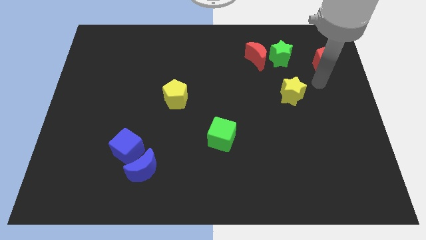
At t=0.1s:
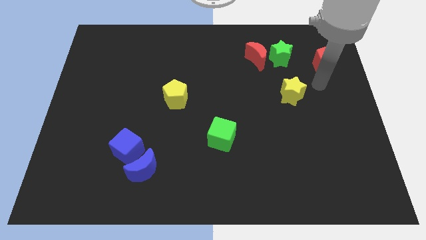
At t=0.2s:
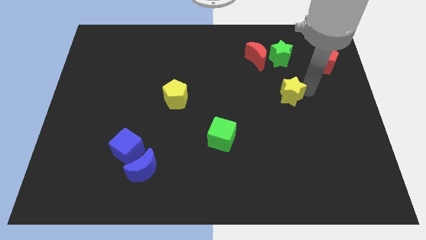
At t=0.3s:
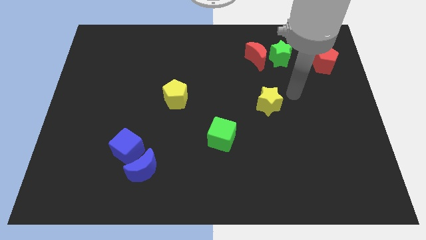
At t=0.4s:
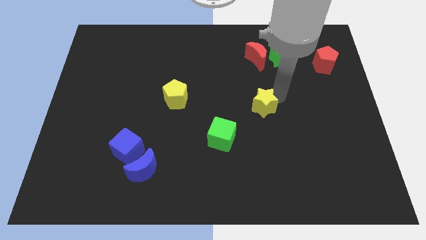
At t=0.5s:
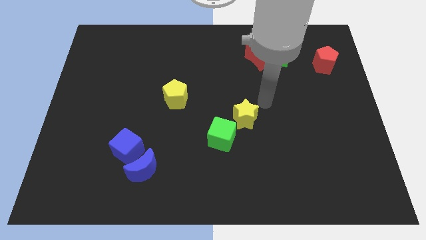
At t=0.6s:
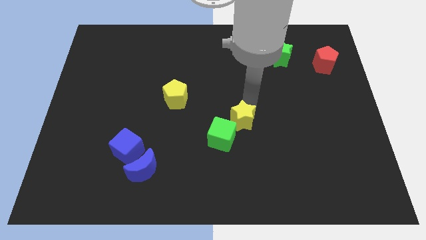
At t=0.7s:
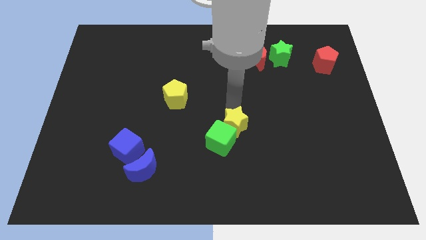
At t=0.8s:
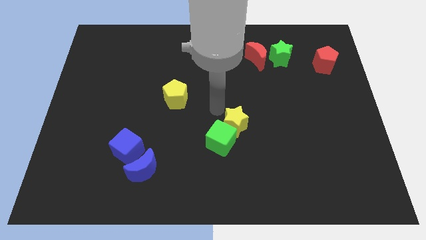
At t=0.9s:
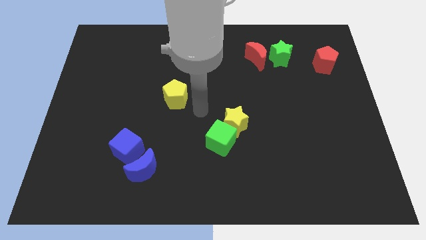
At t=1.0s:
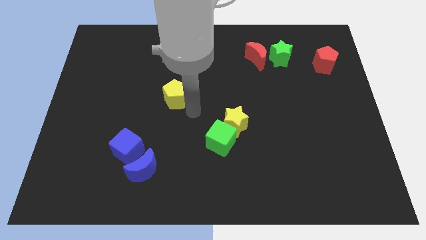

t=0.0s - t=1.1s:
push the yellow star towards the green cube at the center of the board

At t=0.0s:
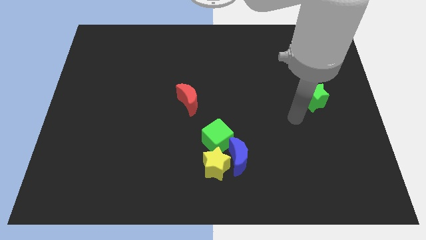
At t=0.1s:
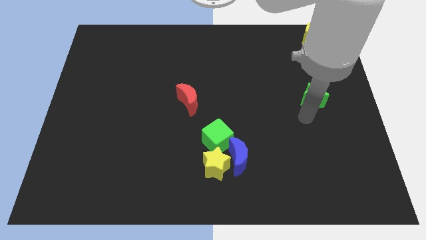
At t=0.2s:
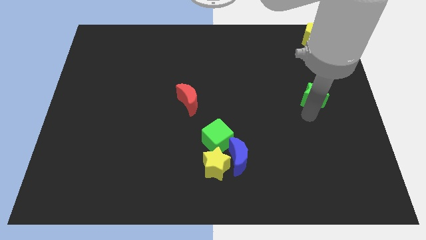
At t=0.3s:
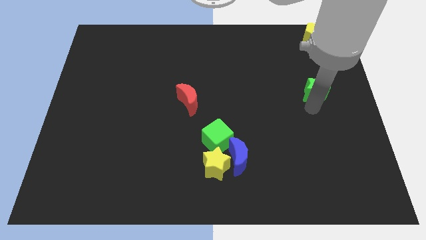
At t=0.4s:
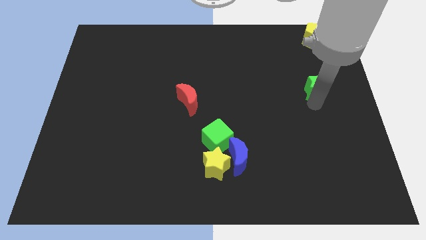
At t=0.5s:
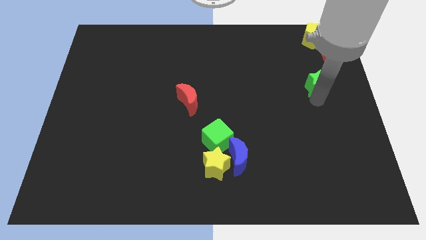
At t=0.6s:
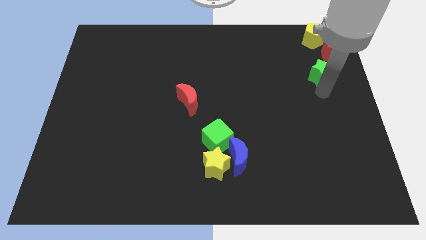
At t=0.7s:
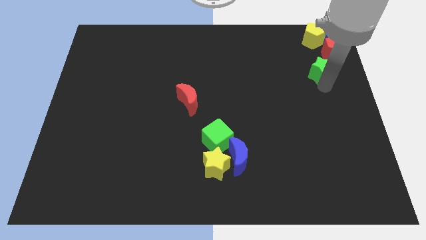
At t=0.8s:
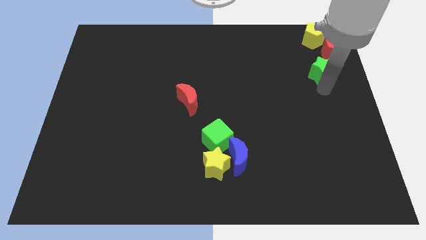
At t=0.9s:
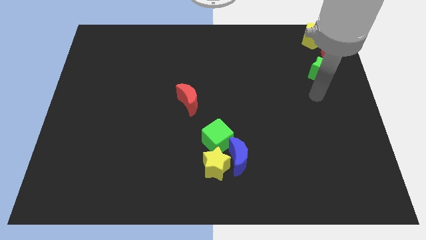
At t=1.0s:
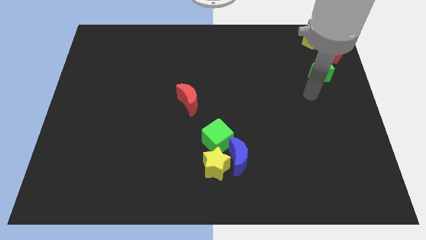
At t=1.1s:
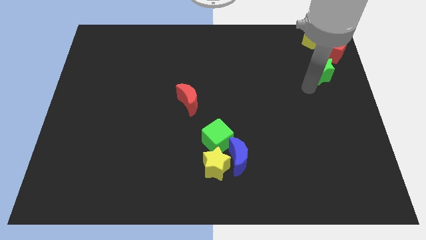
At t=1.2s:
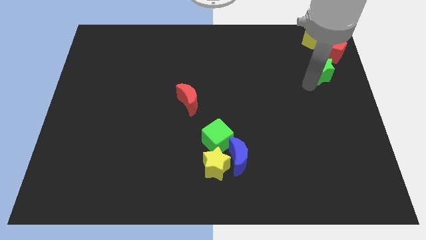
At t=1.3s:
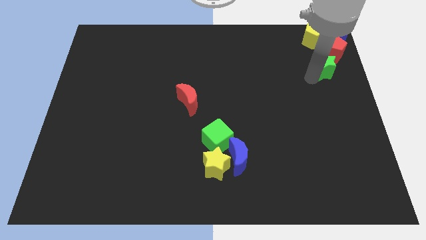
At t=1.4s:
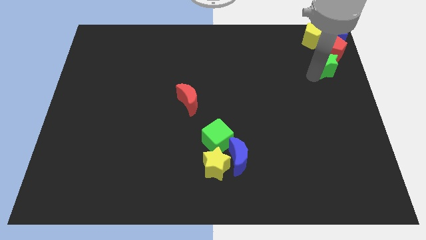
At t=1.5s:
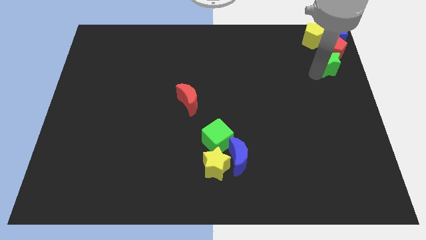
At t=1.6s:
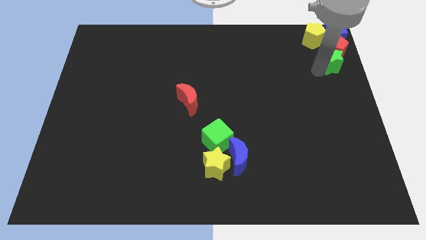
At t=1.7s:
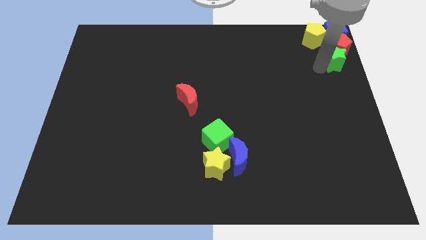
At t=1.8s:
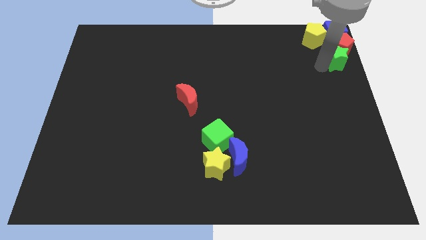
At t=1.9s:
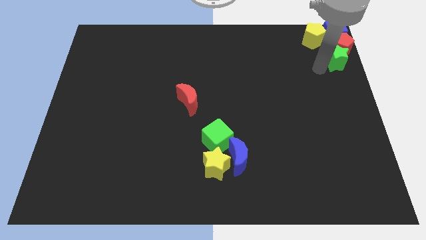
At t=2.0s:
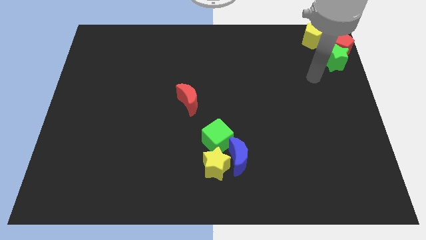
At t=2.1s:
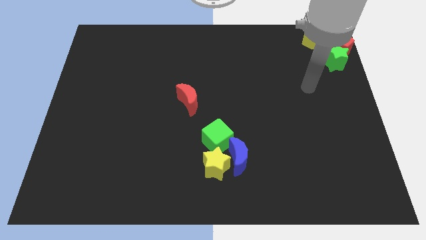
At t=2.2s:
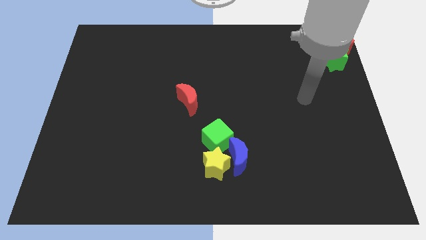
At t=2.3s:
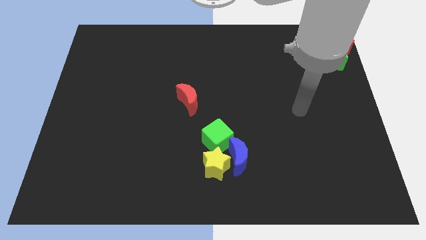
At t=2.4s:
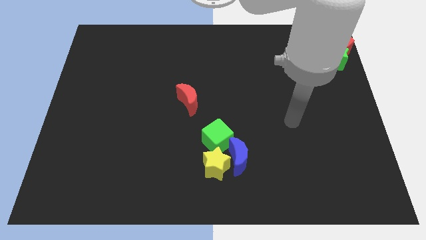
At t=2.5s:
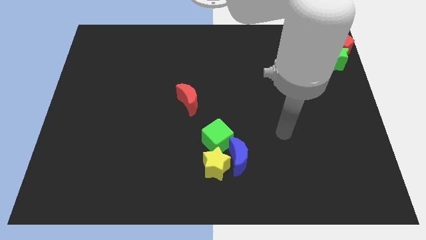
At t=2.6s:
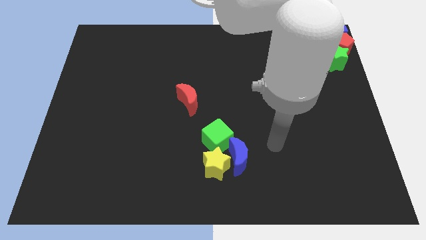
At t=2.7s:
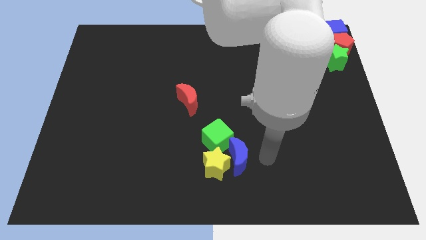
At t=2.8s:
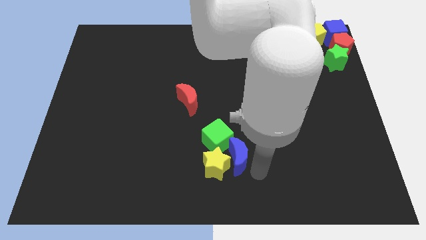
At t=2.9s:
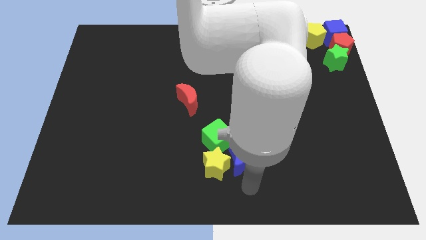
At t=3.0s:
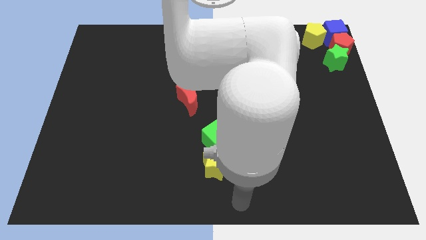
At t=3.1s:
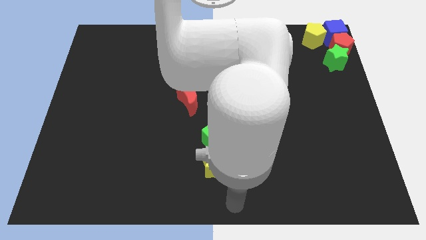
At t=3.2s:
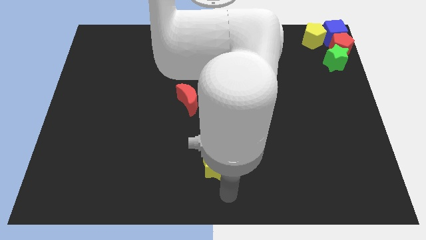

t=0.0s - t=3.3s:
place your hand at the bottom center of the board

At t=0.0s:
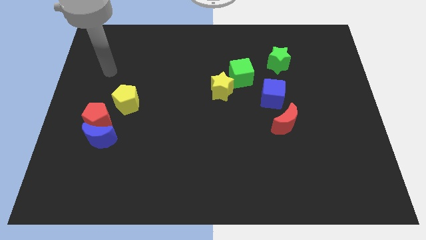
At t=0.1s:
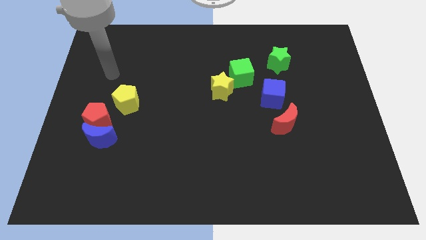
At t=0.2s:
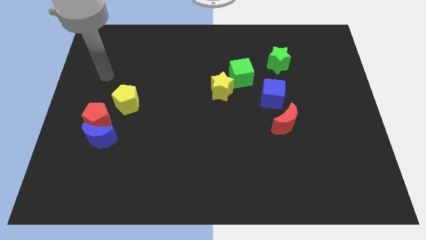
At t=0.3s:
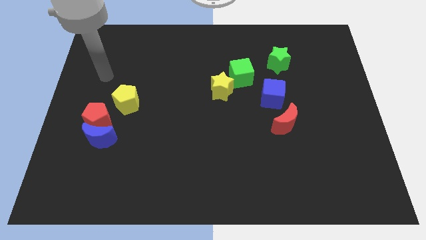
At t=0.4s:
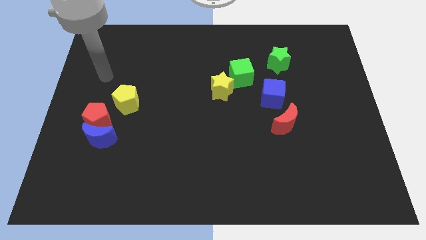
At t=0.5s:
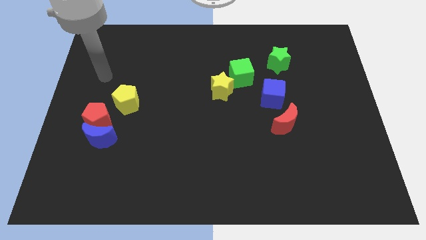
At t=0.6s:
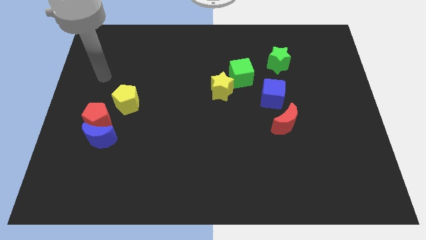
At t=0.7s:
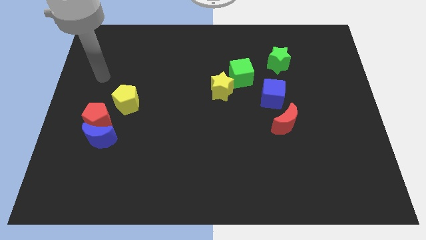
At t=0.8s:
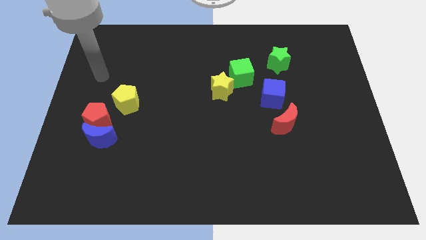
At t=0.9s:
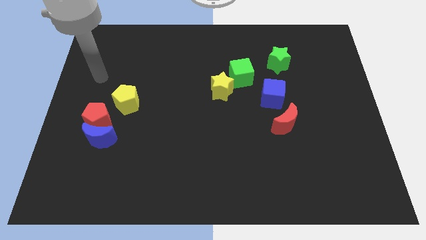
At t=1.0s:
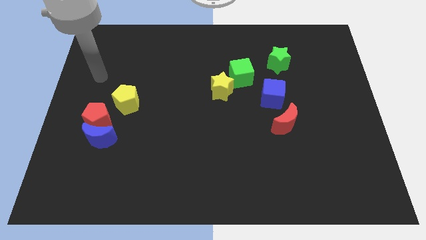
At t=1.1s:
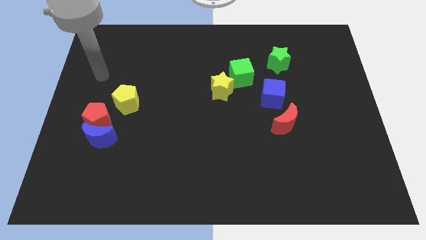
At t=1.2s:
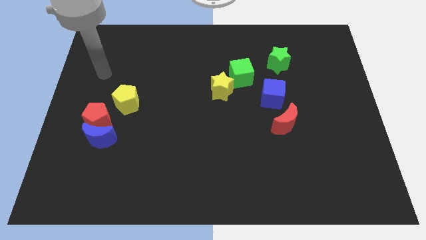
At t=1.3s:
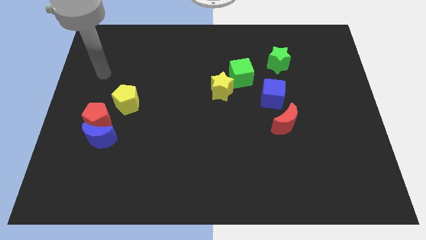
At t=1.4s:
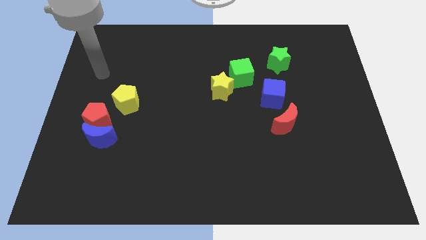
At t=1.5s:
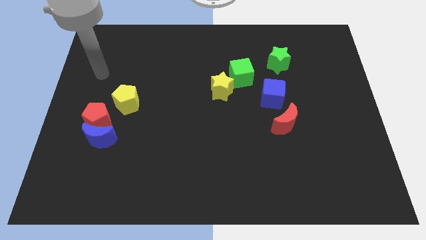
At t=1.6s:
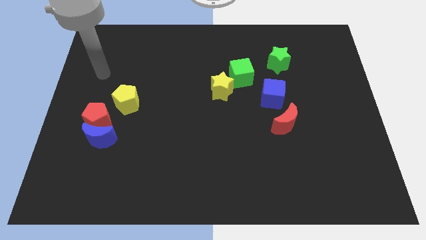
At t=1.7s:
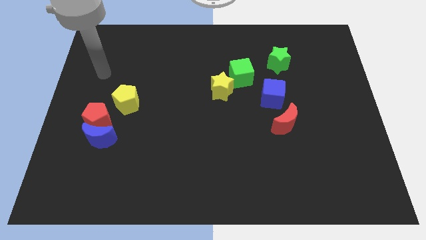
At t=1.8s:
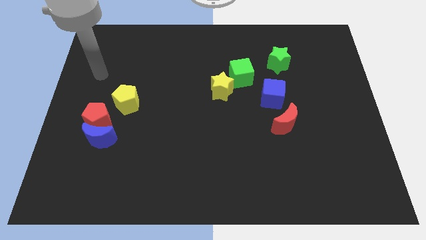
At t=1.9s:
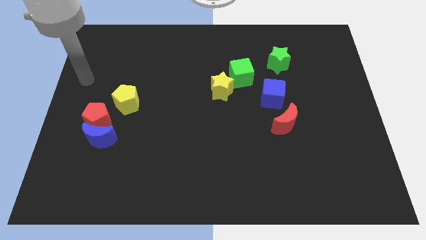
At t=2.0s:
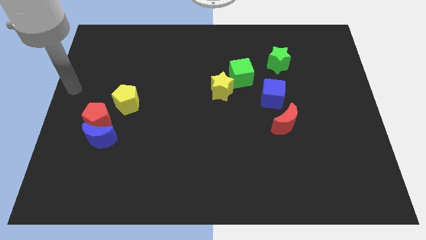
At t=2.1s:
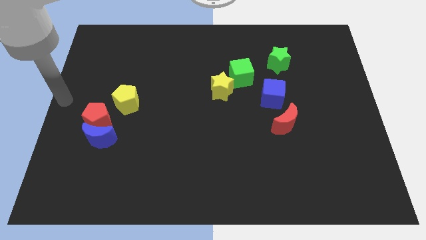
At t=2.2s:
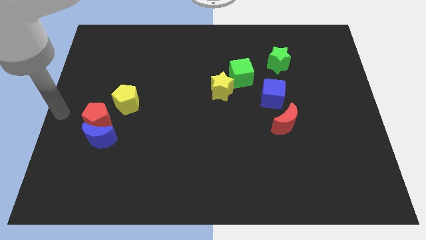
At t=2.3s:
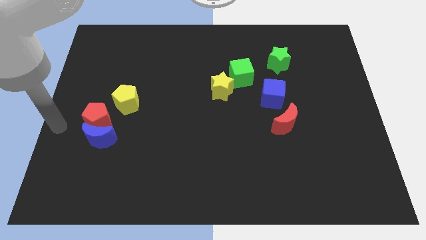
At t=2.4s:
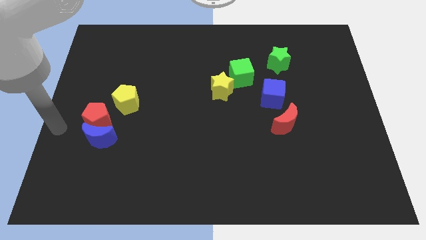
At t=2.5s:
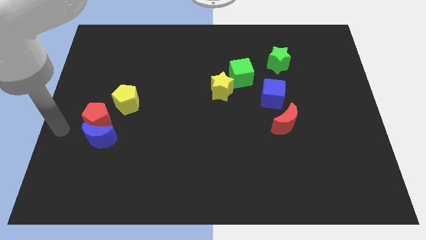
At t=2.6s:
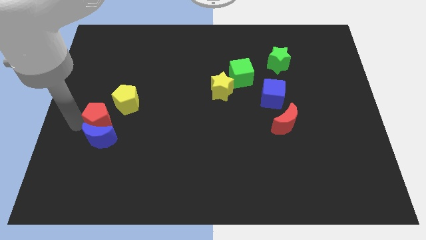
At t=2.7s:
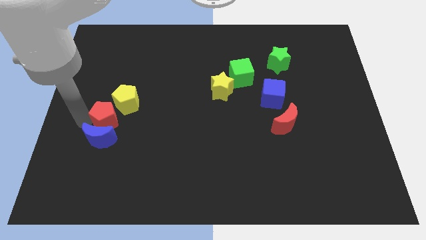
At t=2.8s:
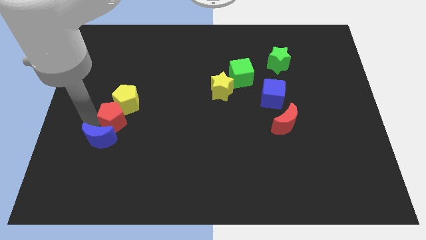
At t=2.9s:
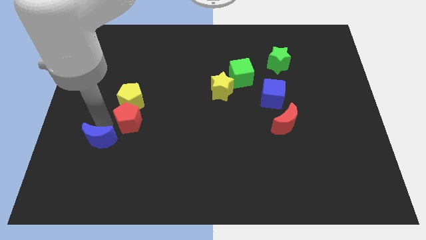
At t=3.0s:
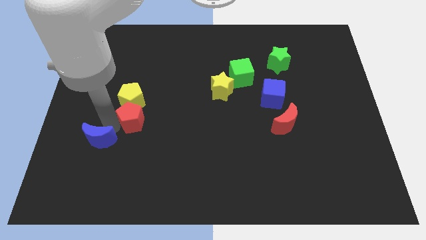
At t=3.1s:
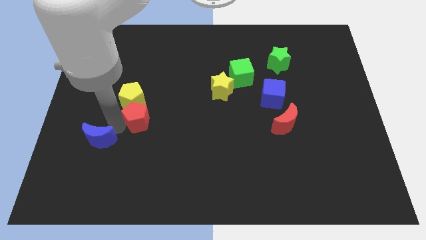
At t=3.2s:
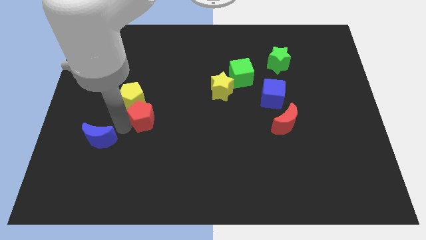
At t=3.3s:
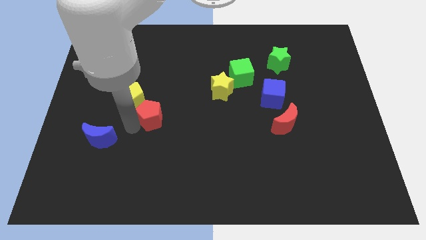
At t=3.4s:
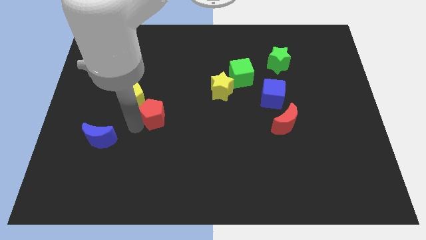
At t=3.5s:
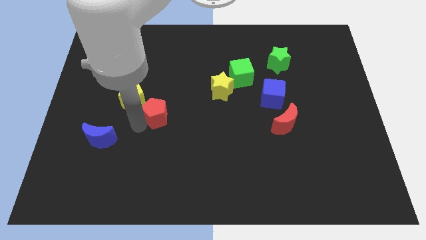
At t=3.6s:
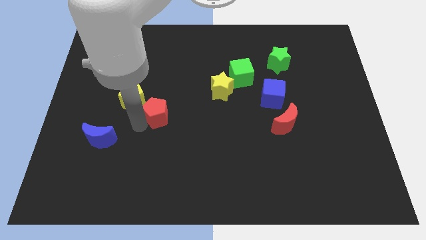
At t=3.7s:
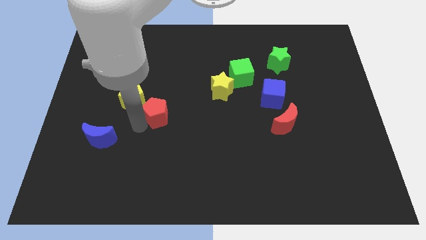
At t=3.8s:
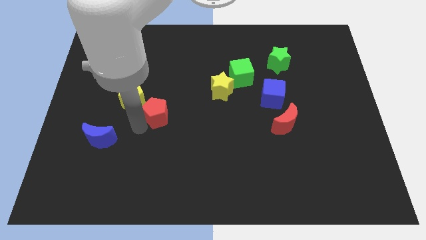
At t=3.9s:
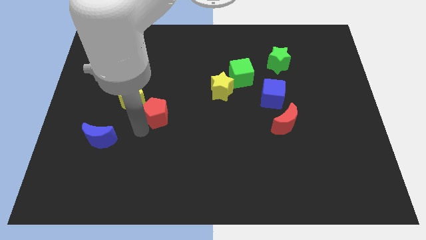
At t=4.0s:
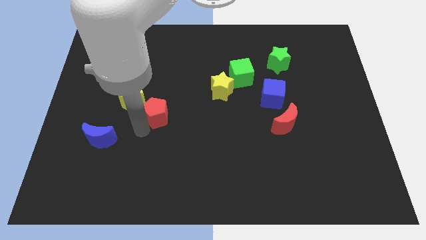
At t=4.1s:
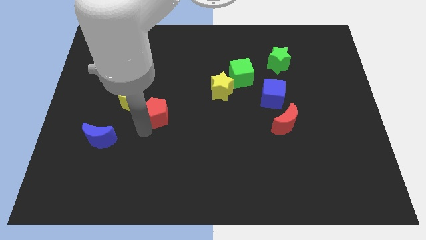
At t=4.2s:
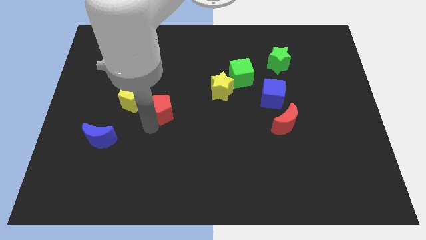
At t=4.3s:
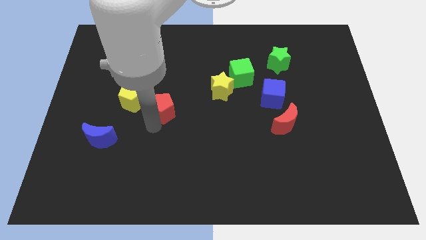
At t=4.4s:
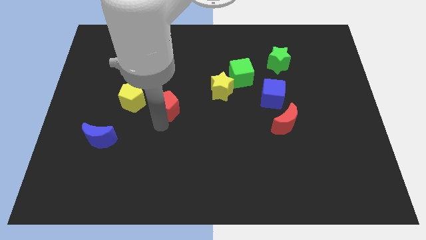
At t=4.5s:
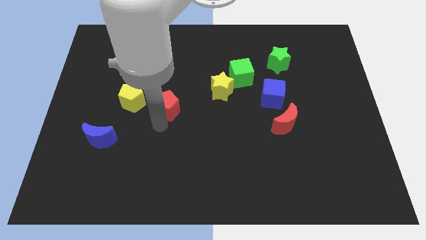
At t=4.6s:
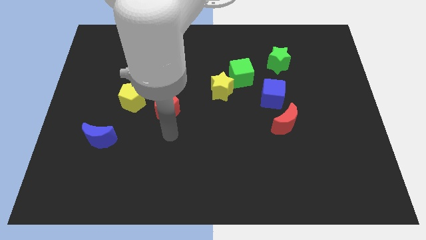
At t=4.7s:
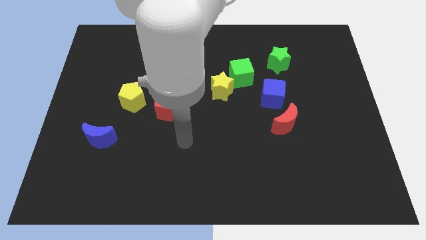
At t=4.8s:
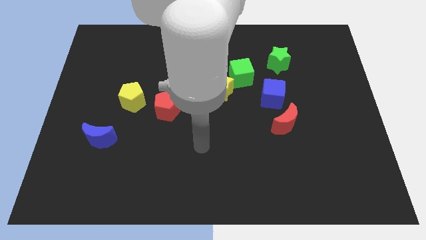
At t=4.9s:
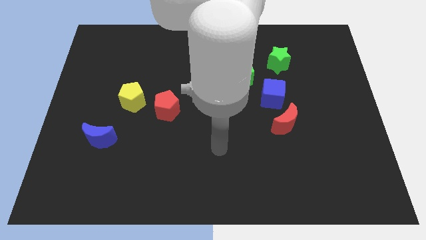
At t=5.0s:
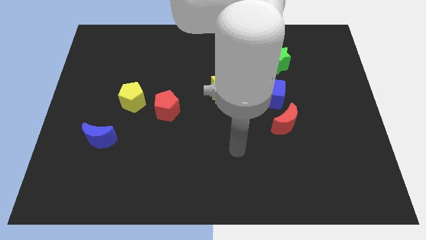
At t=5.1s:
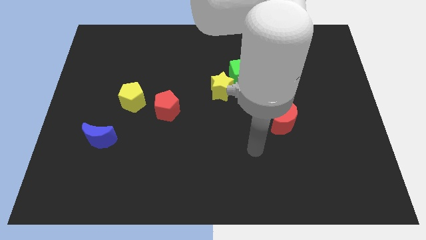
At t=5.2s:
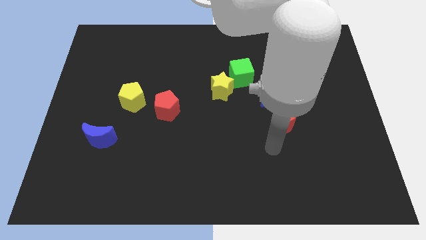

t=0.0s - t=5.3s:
move the red pentagon to the right of the yellow pentagon
